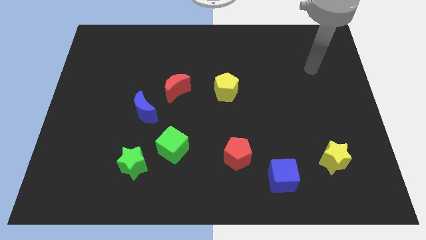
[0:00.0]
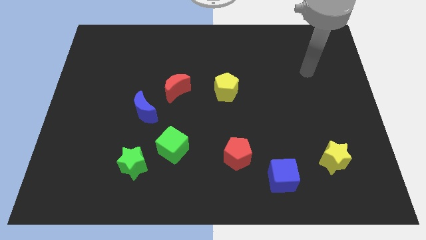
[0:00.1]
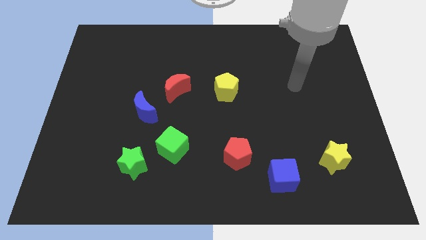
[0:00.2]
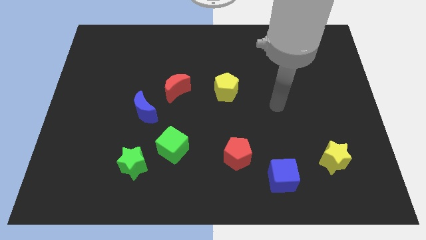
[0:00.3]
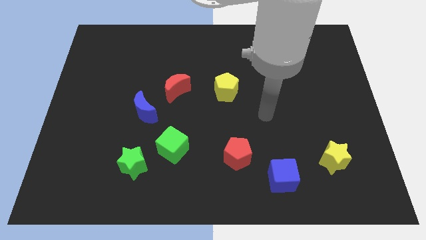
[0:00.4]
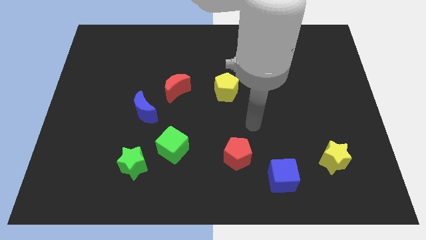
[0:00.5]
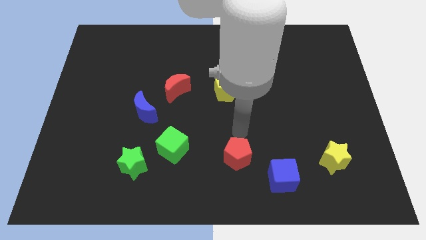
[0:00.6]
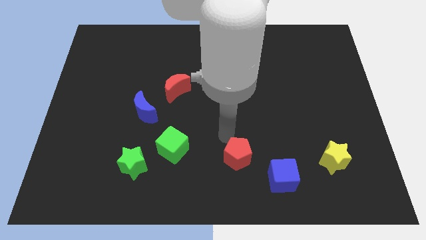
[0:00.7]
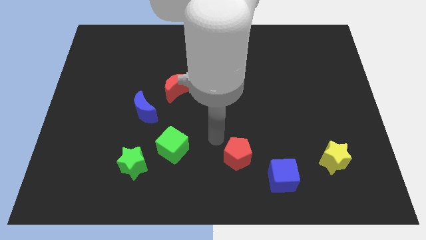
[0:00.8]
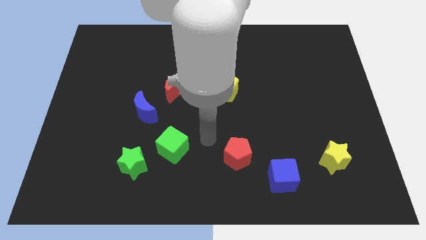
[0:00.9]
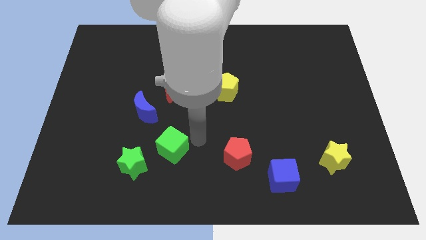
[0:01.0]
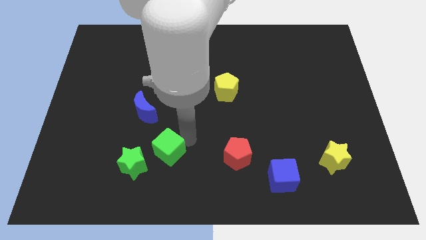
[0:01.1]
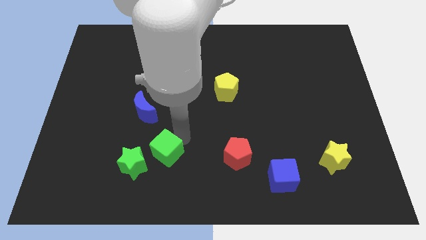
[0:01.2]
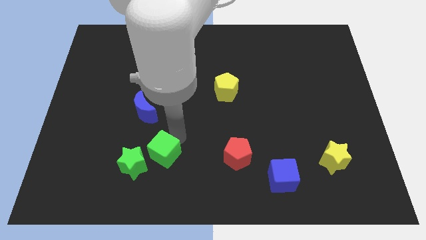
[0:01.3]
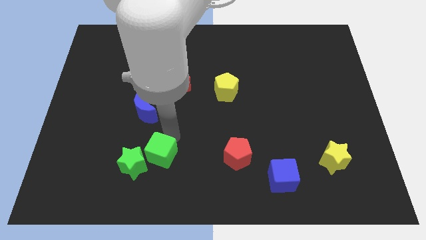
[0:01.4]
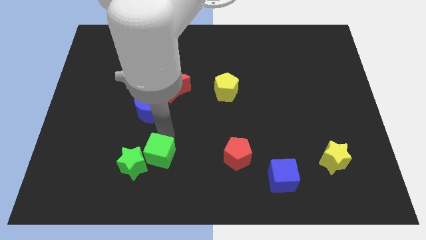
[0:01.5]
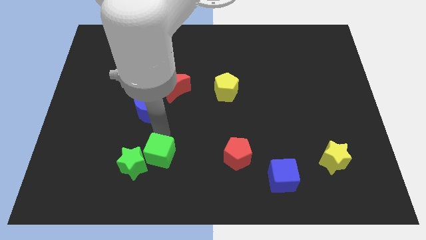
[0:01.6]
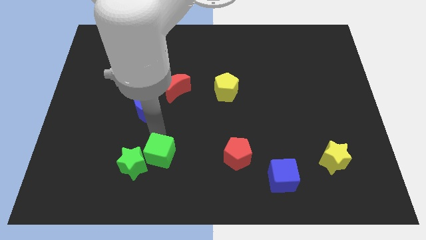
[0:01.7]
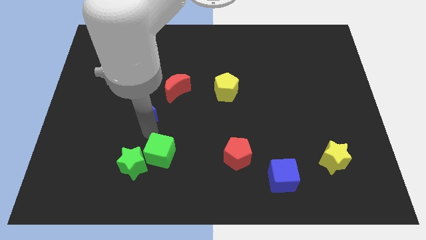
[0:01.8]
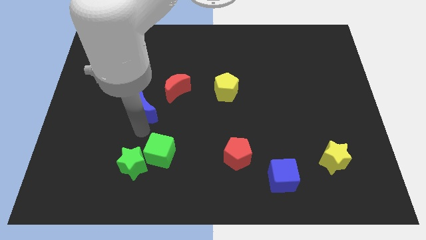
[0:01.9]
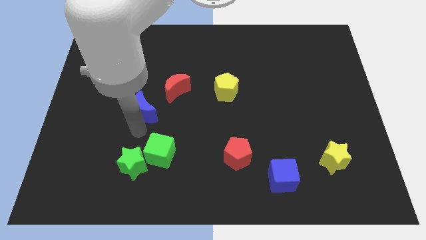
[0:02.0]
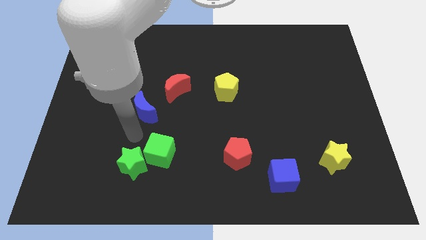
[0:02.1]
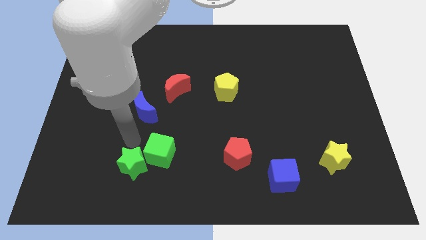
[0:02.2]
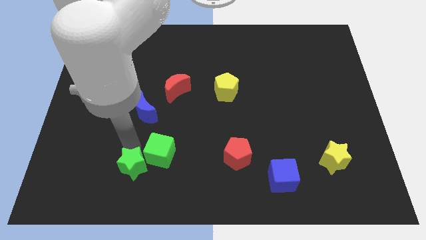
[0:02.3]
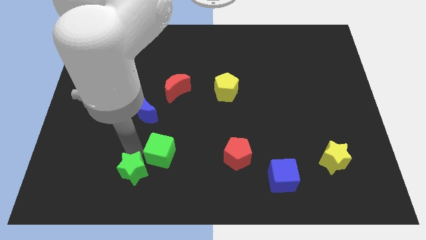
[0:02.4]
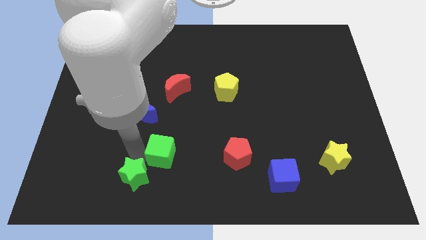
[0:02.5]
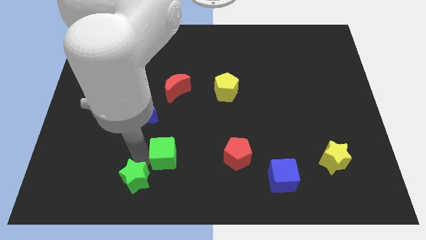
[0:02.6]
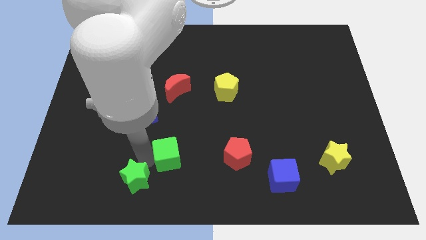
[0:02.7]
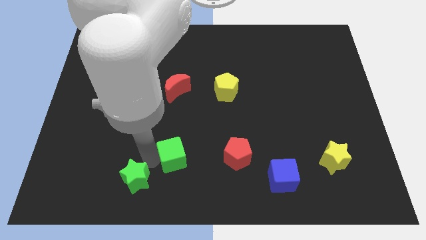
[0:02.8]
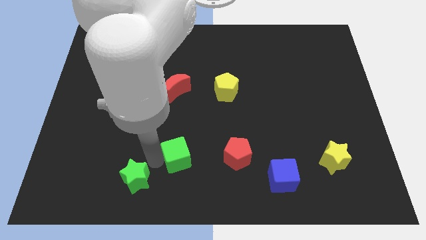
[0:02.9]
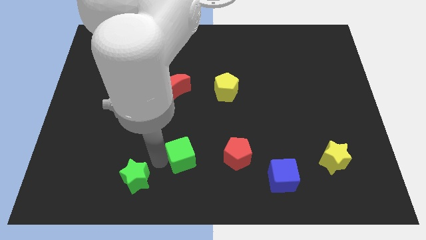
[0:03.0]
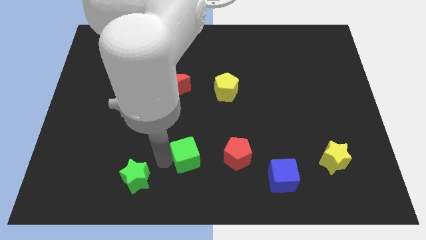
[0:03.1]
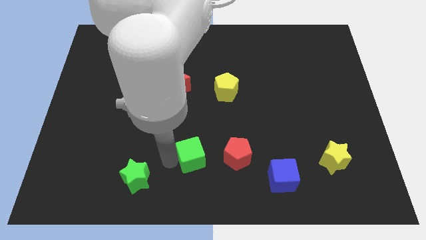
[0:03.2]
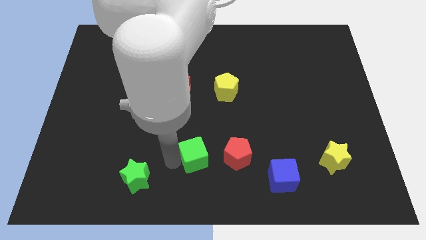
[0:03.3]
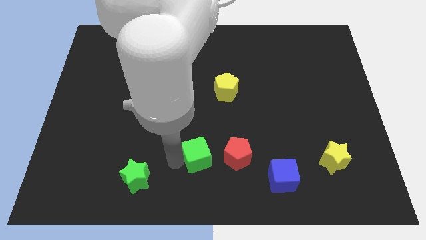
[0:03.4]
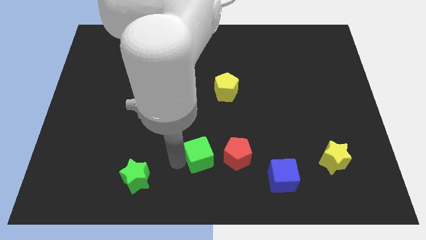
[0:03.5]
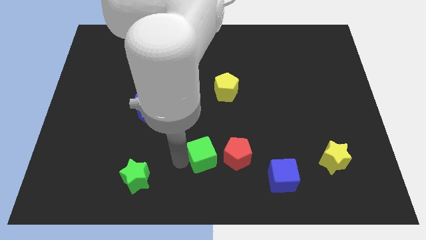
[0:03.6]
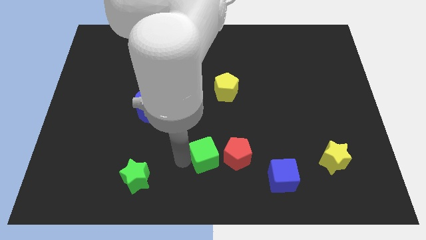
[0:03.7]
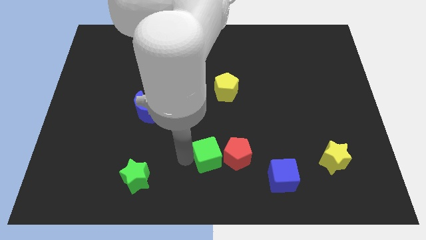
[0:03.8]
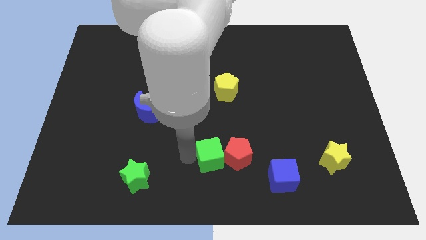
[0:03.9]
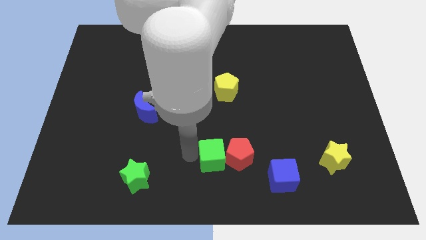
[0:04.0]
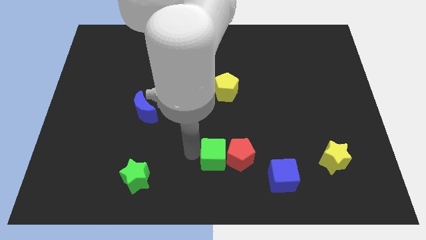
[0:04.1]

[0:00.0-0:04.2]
move the green cube close to the red pentagon

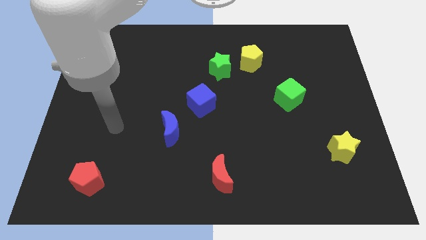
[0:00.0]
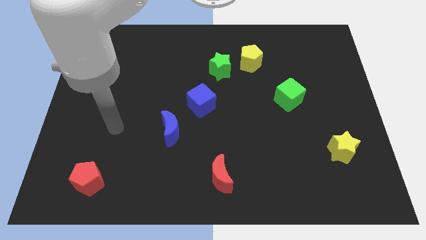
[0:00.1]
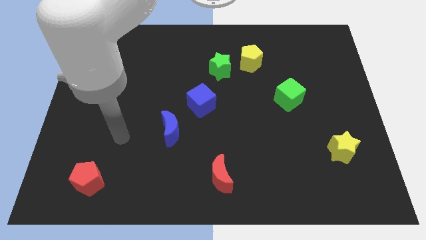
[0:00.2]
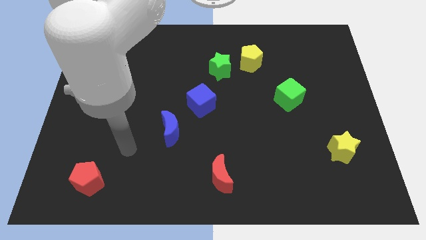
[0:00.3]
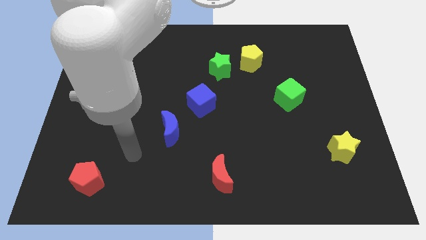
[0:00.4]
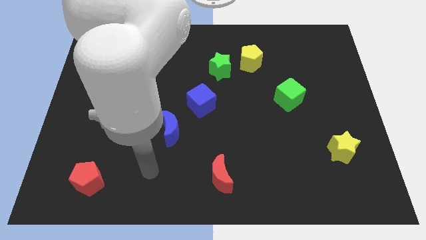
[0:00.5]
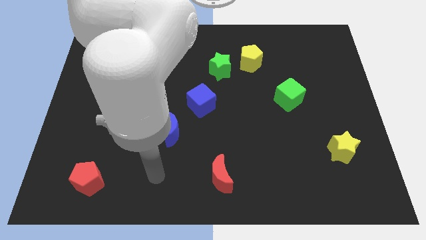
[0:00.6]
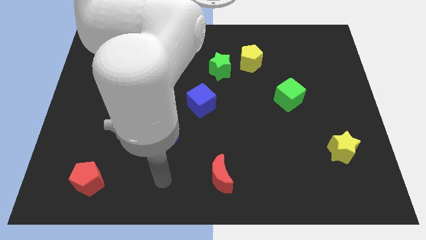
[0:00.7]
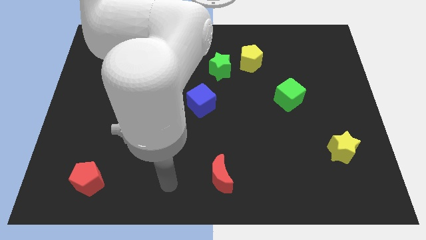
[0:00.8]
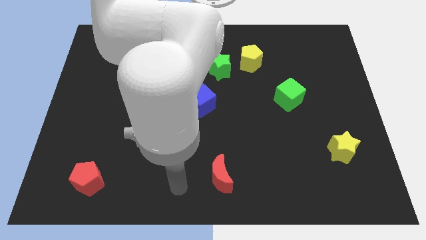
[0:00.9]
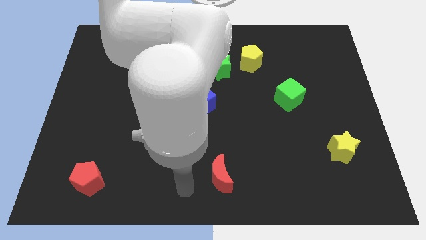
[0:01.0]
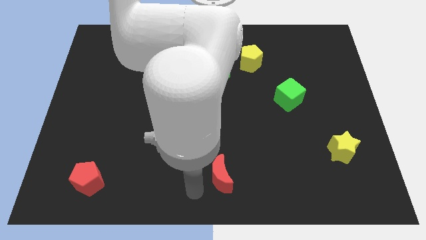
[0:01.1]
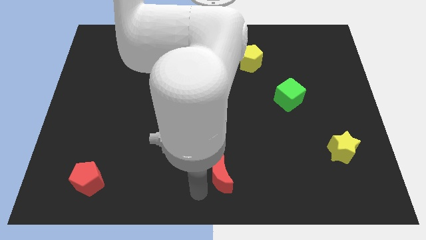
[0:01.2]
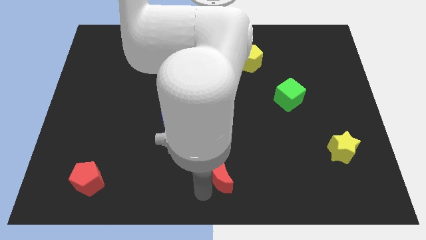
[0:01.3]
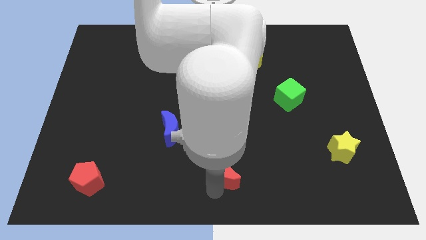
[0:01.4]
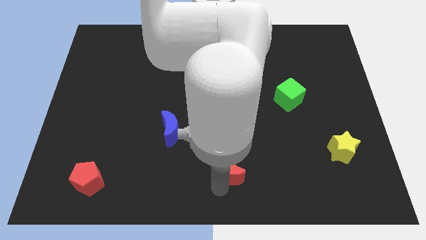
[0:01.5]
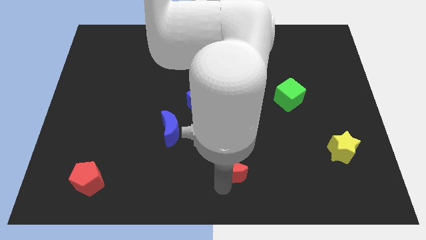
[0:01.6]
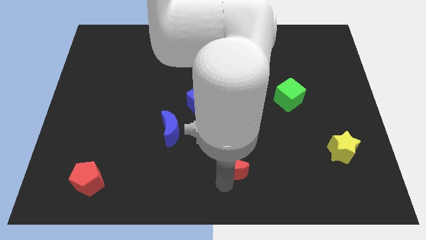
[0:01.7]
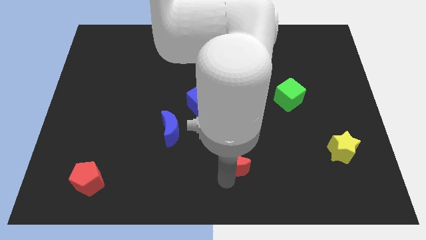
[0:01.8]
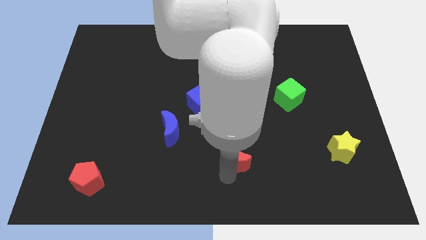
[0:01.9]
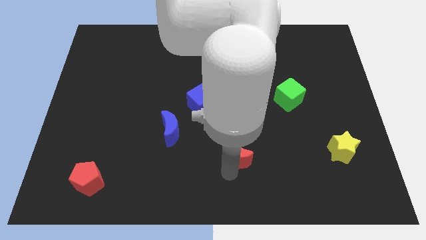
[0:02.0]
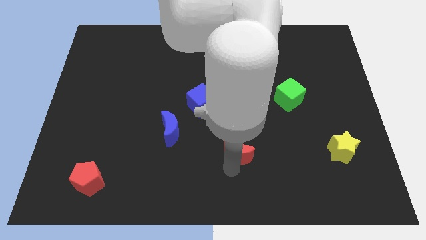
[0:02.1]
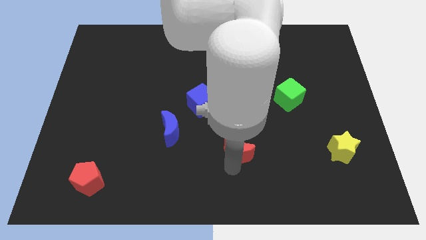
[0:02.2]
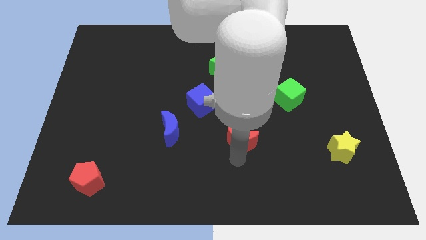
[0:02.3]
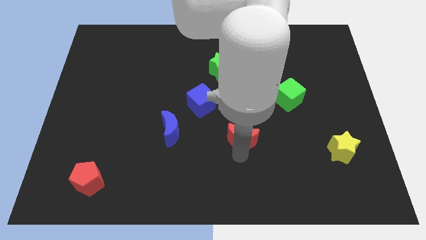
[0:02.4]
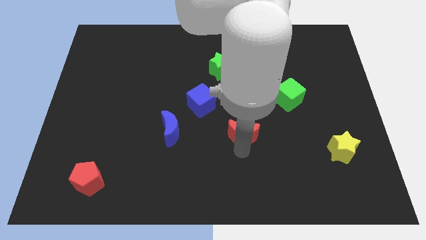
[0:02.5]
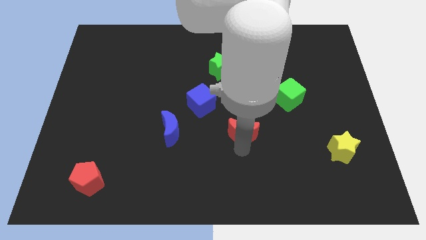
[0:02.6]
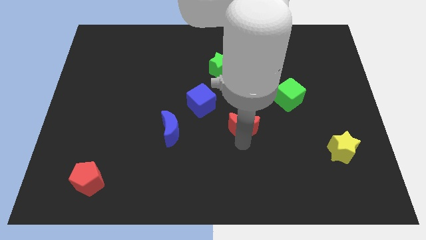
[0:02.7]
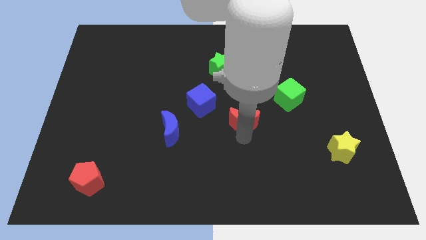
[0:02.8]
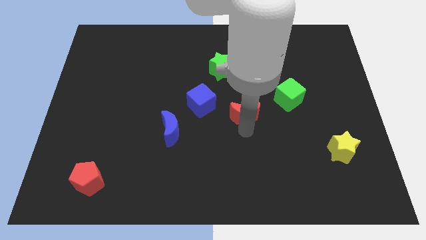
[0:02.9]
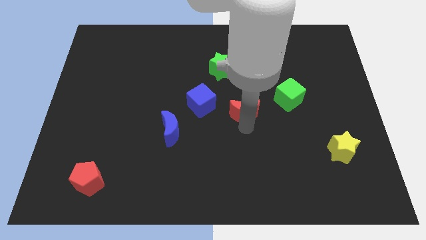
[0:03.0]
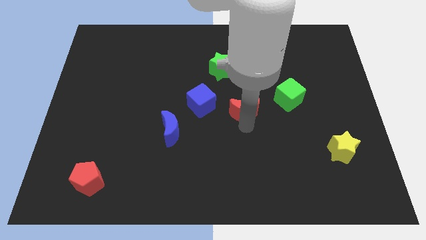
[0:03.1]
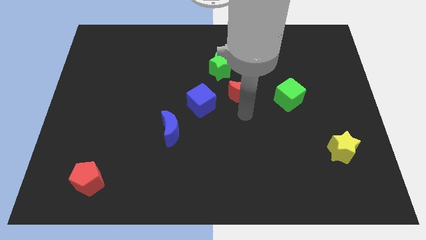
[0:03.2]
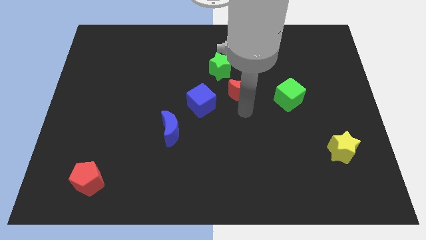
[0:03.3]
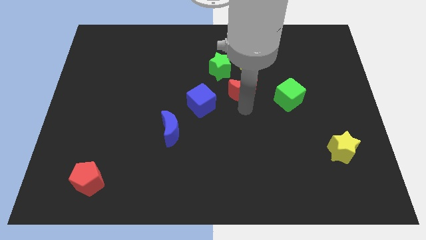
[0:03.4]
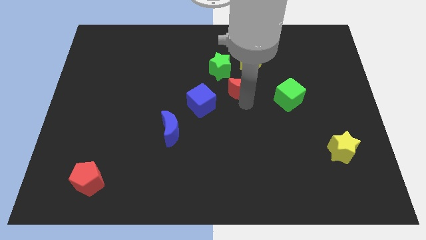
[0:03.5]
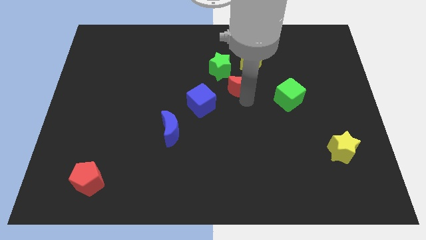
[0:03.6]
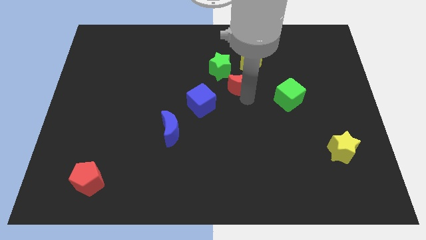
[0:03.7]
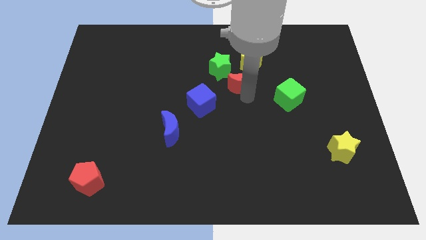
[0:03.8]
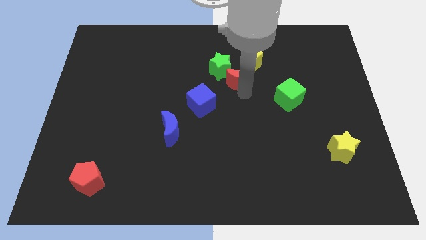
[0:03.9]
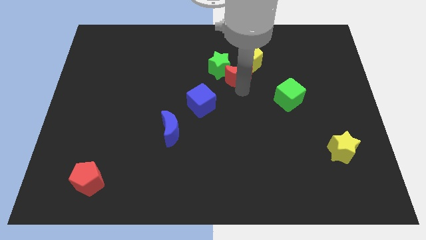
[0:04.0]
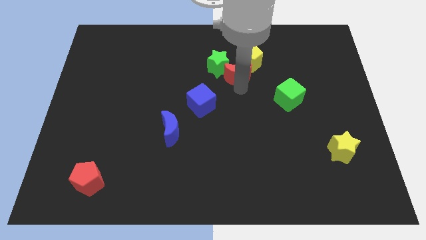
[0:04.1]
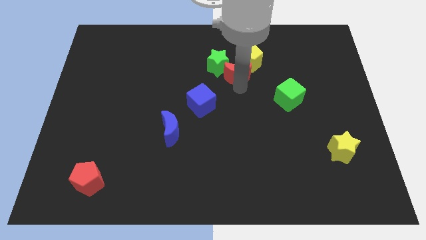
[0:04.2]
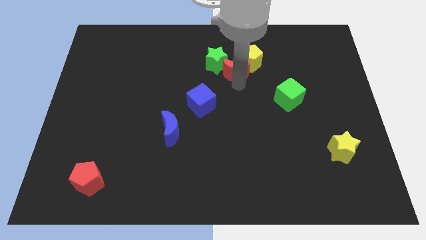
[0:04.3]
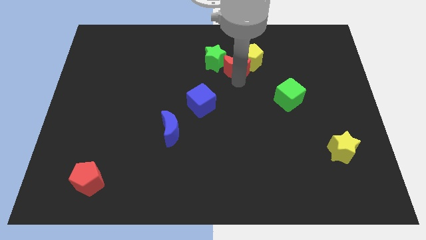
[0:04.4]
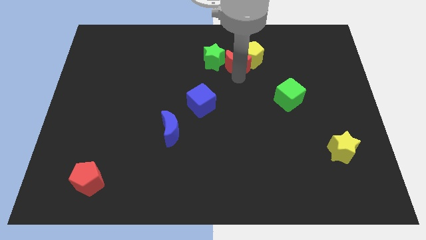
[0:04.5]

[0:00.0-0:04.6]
move the red moon close to the yellow pentagon
